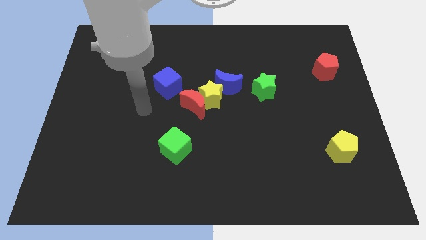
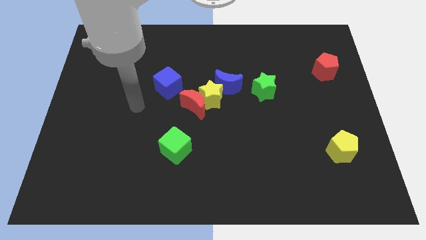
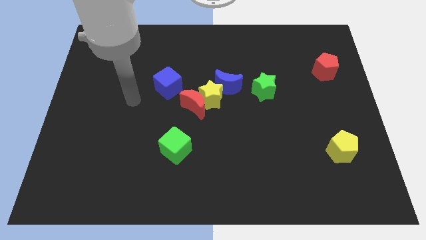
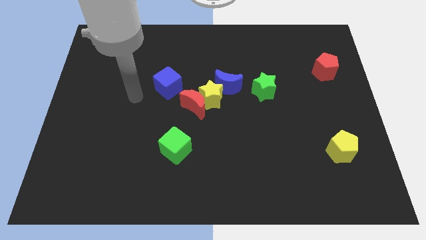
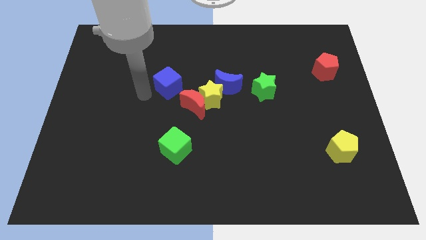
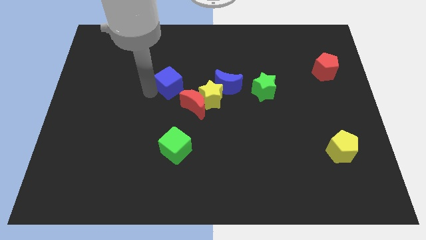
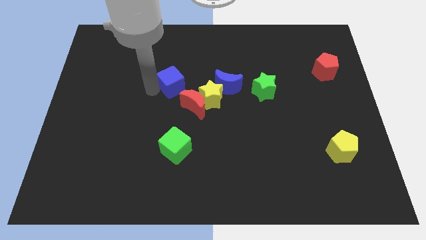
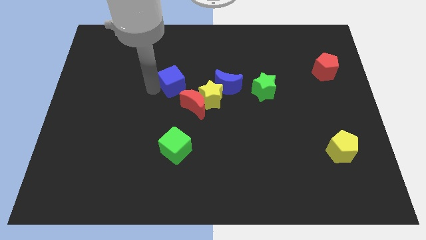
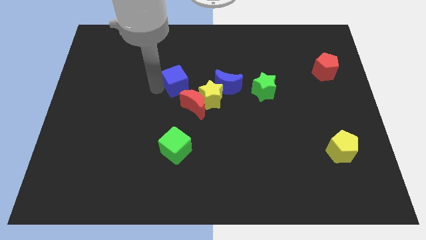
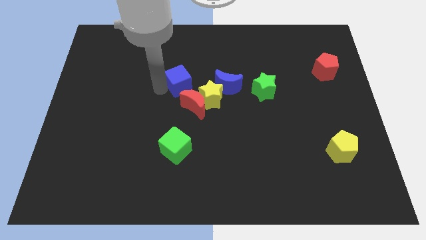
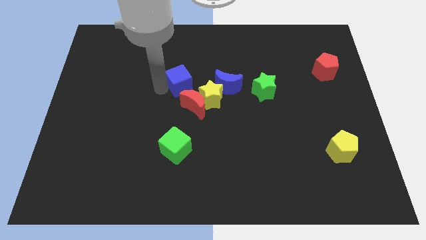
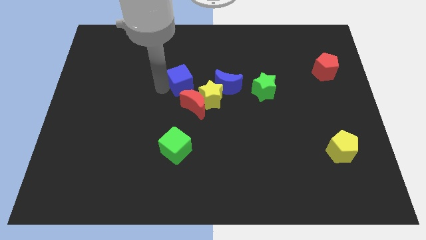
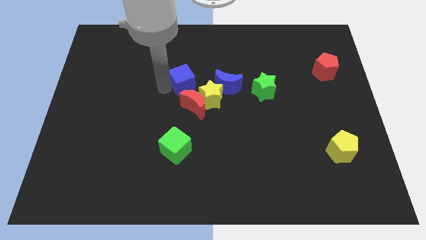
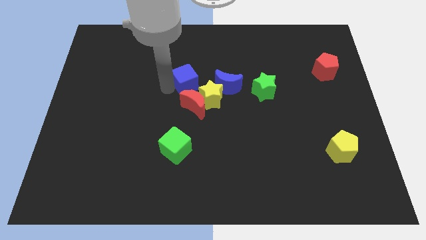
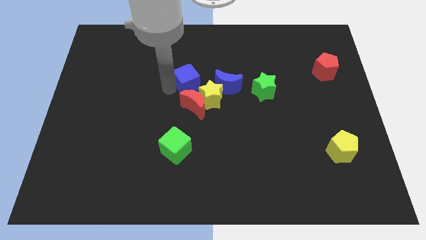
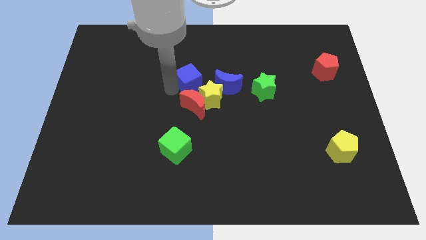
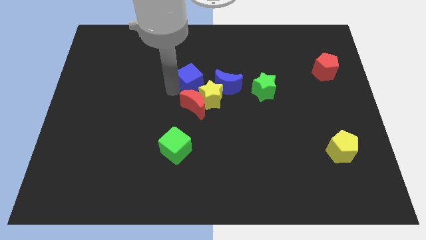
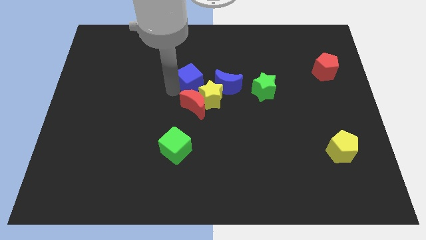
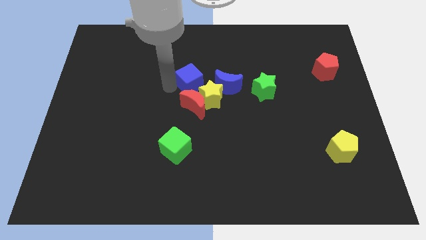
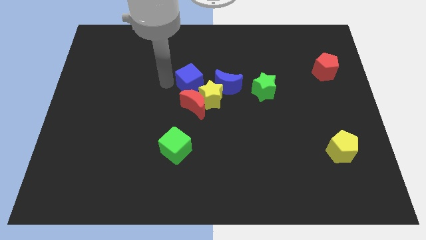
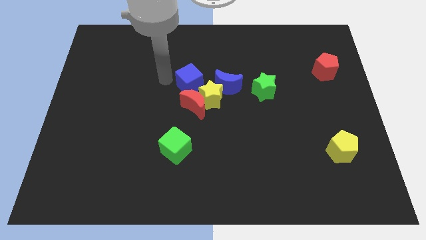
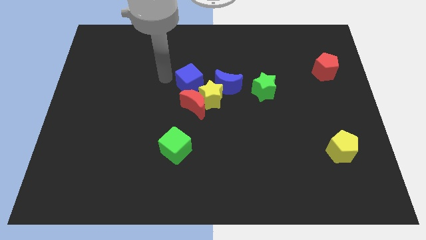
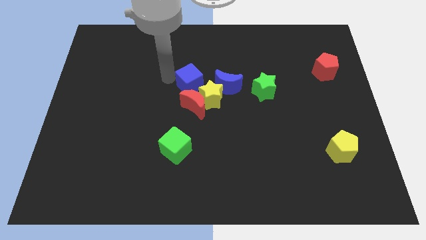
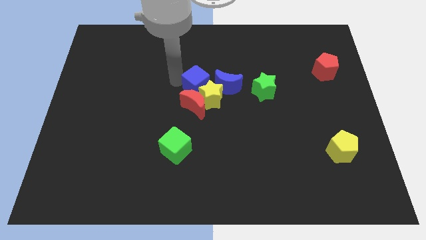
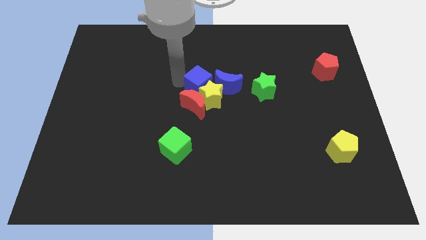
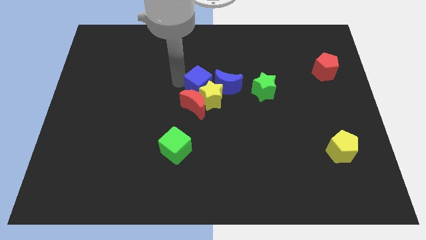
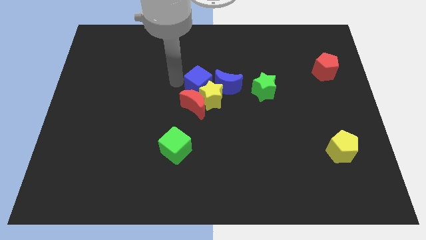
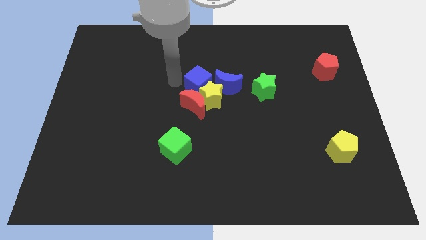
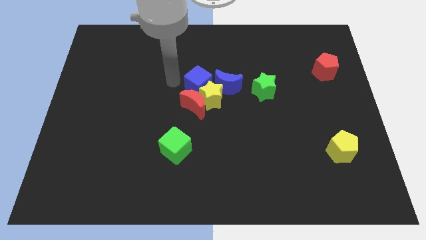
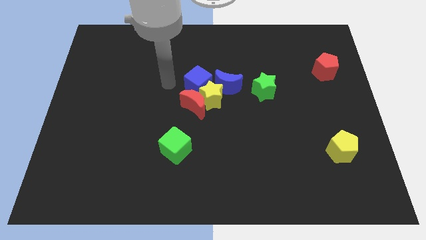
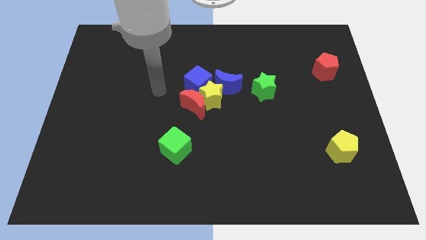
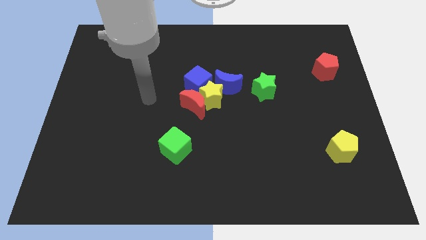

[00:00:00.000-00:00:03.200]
push the blue cube to the top left side of the yellow star

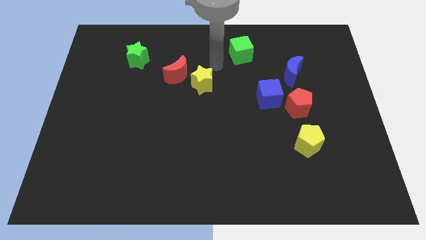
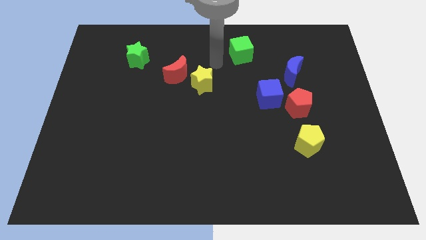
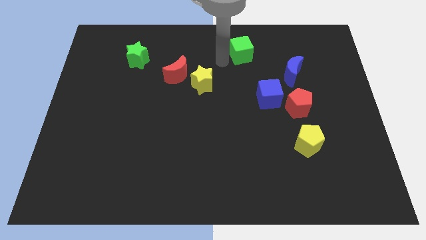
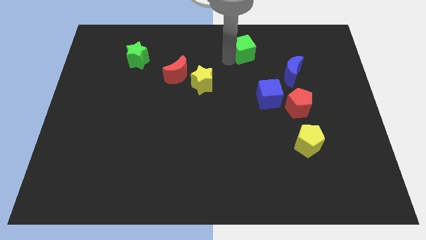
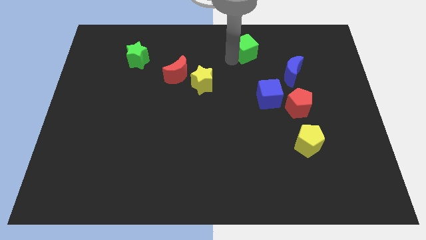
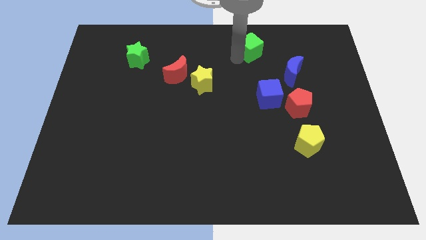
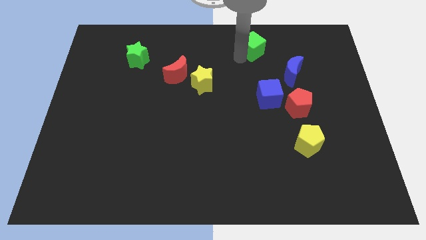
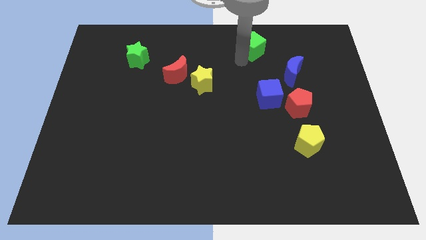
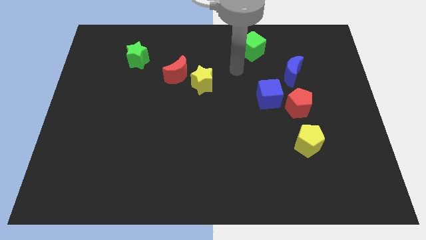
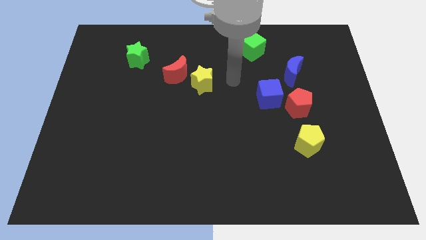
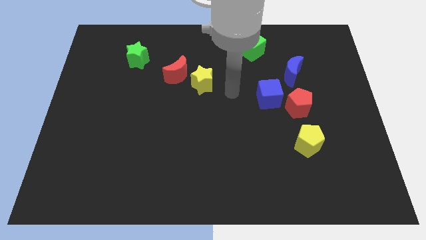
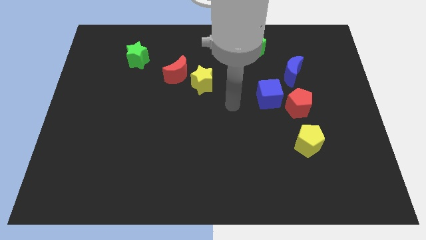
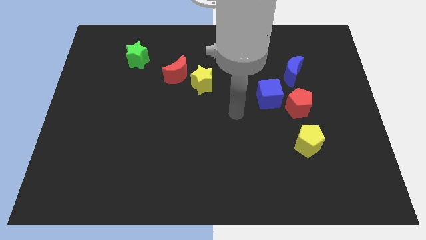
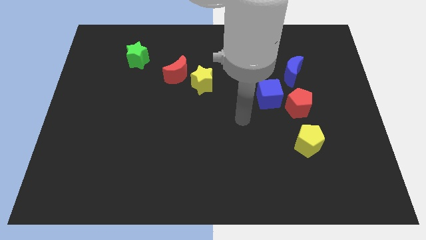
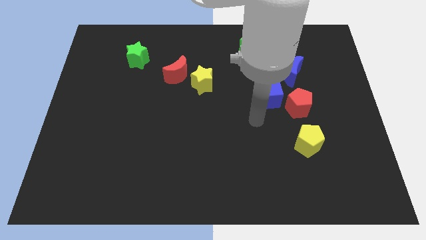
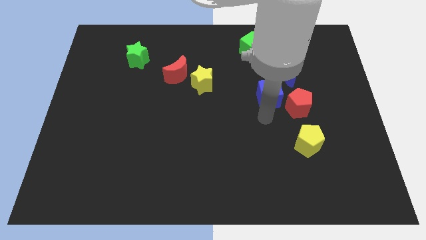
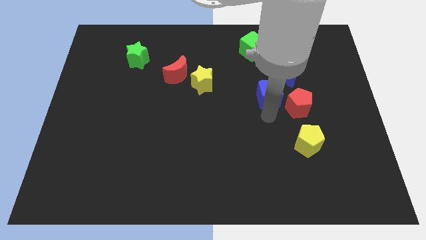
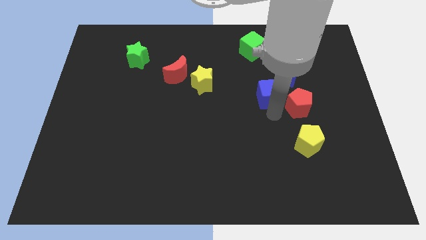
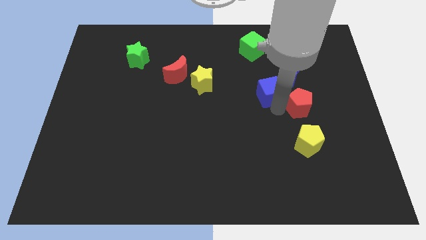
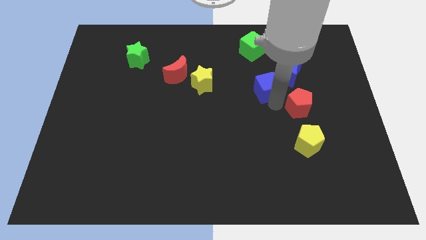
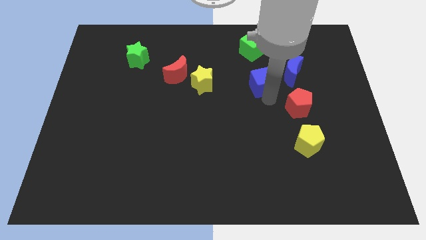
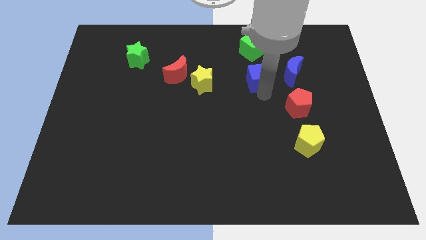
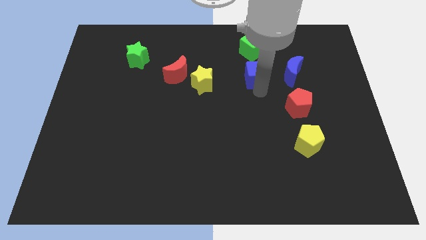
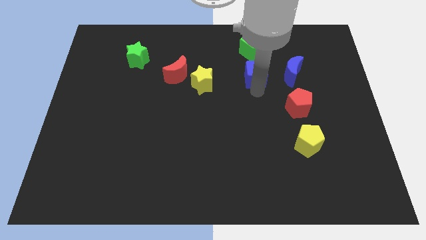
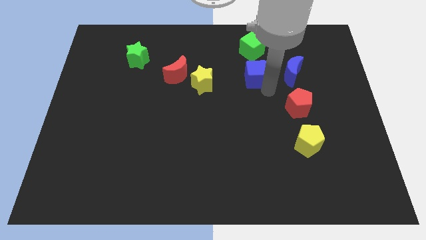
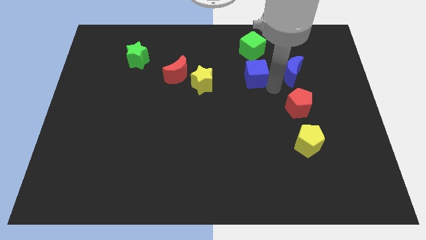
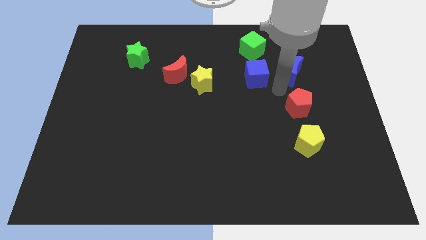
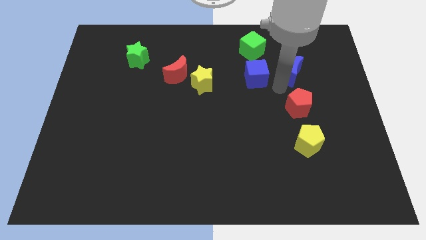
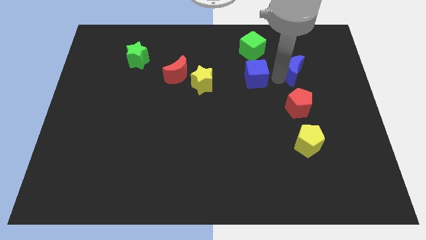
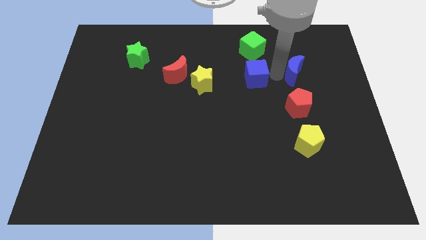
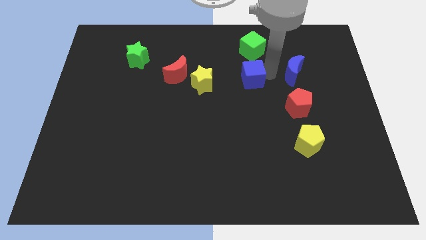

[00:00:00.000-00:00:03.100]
place the green cube and blue cube in a vertical line

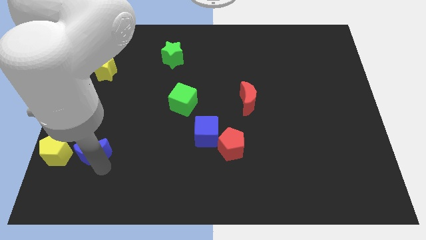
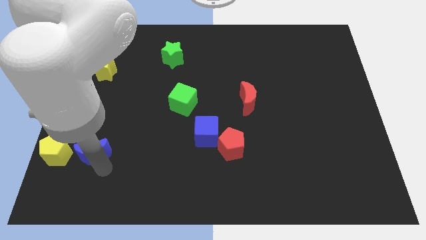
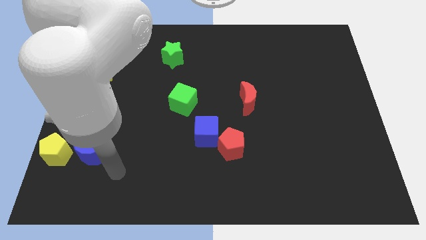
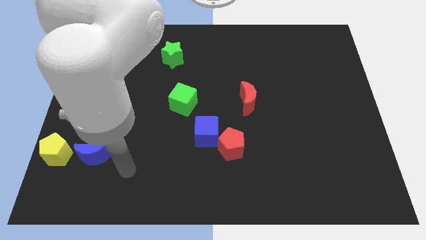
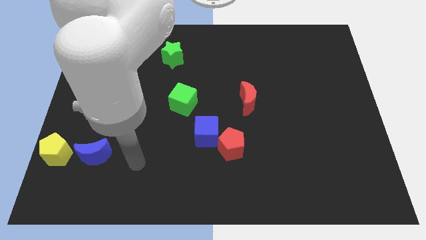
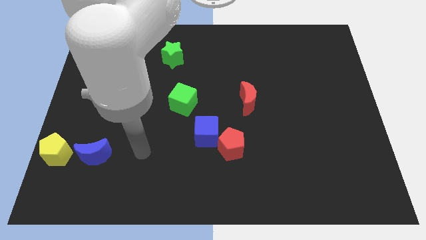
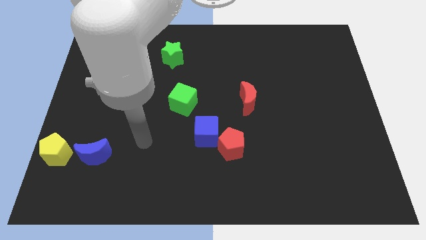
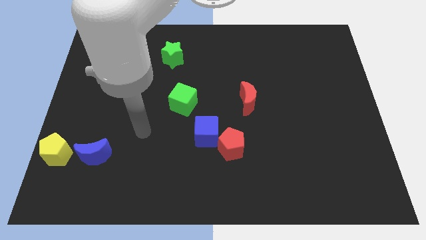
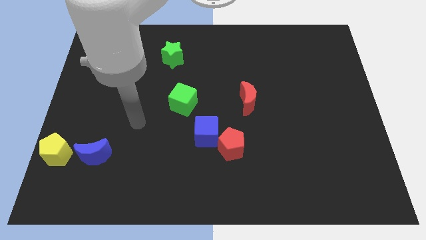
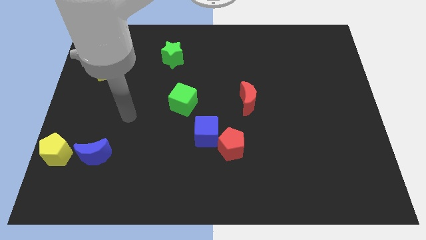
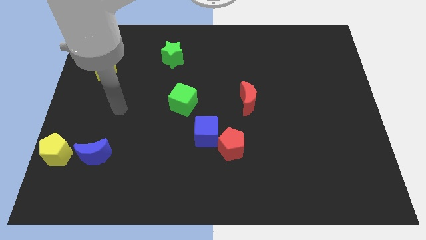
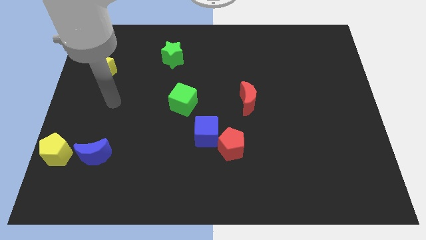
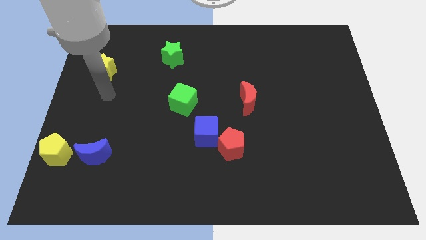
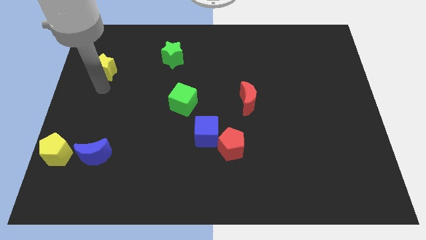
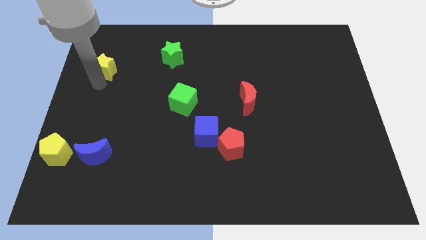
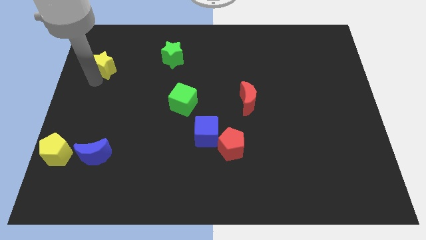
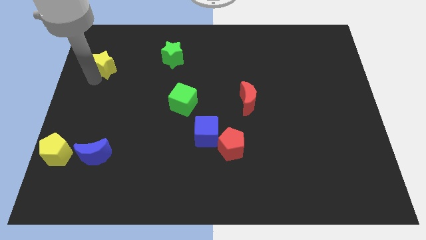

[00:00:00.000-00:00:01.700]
touch the bottom left of the yellow star

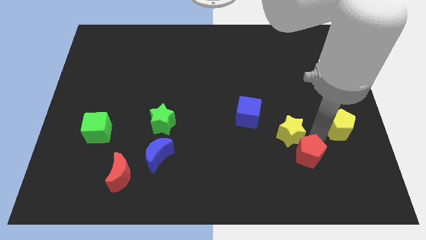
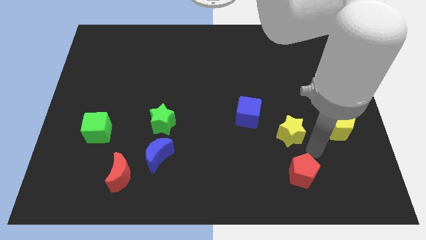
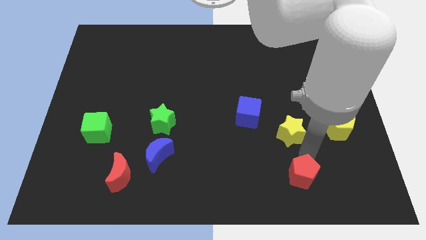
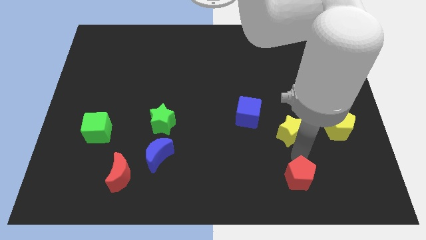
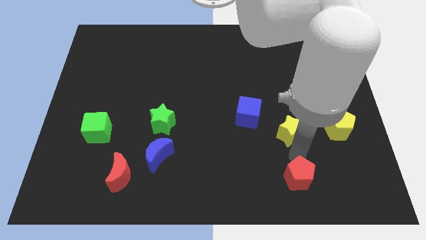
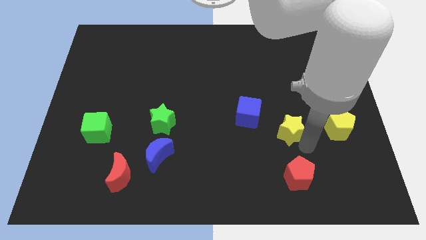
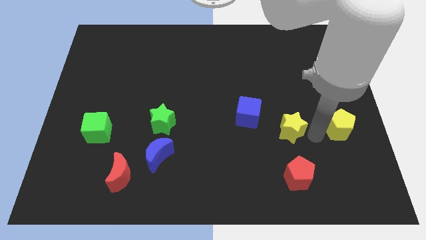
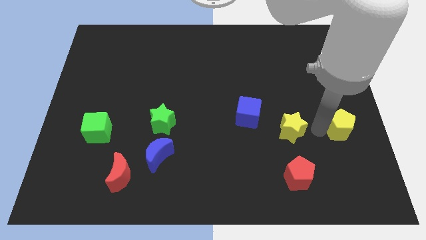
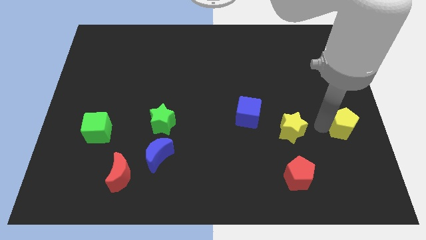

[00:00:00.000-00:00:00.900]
drag the red pentagon vertically at the bottom of the yellow star
